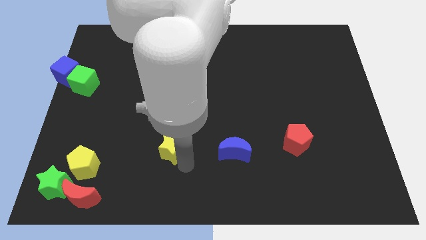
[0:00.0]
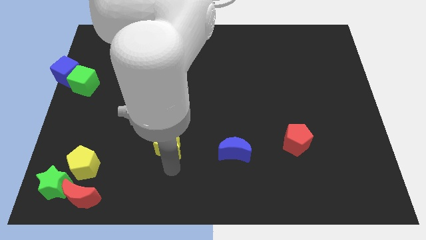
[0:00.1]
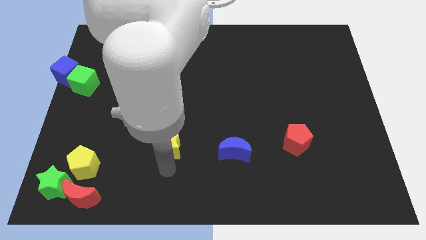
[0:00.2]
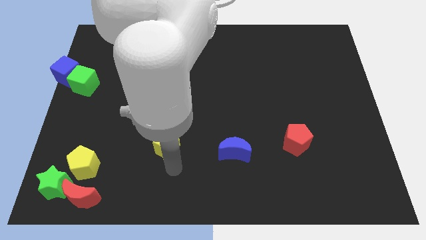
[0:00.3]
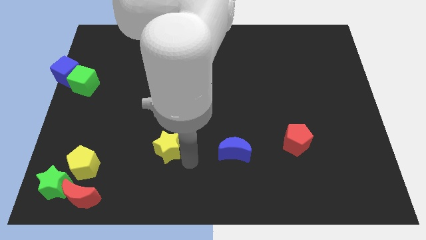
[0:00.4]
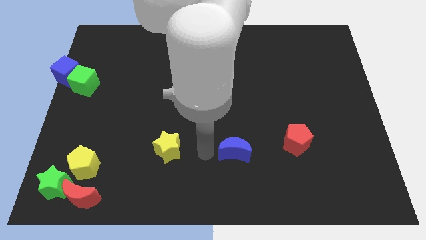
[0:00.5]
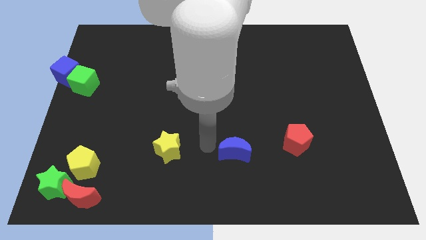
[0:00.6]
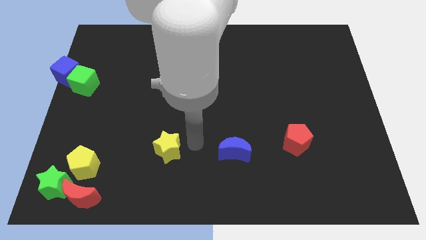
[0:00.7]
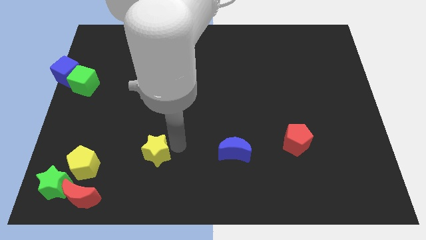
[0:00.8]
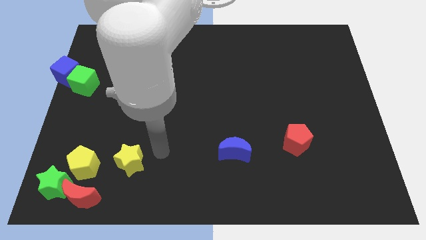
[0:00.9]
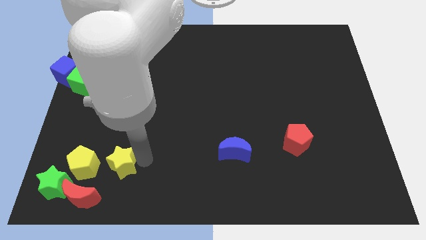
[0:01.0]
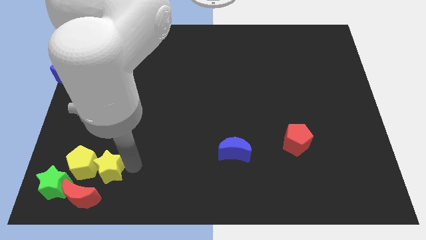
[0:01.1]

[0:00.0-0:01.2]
move the yellow star right to the yellow pentagon

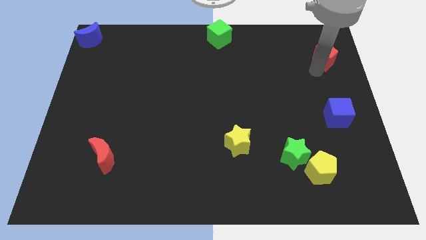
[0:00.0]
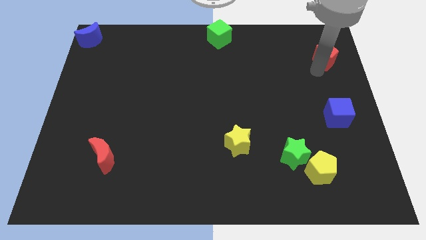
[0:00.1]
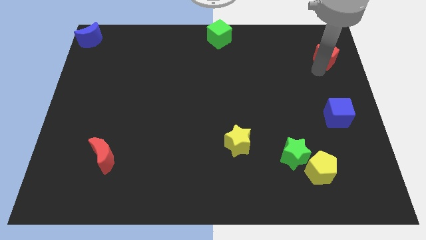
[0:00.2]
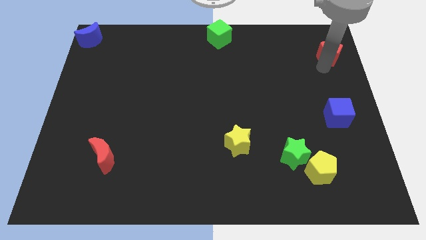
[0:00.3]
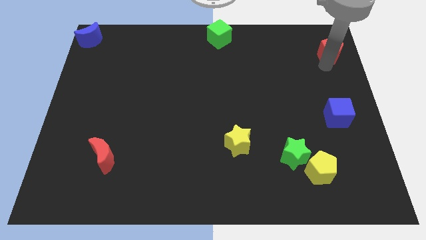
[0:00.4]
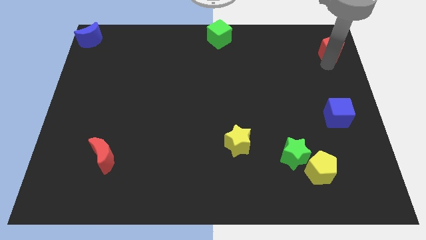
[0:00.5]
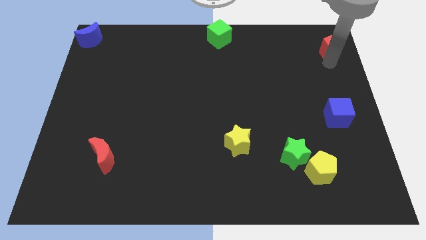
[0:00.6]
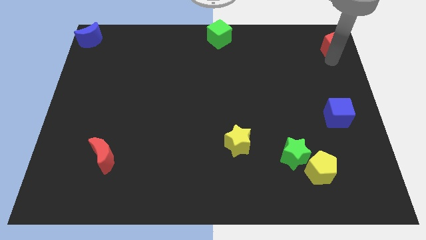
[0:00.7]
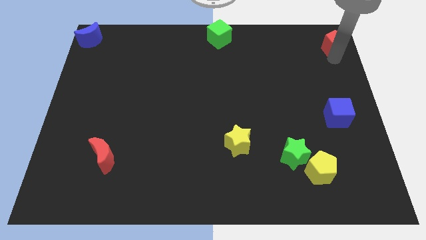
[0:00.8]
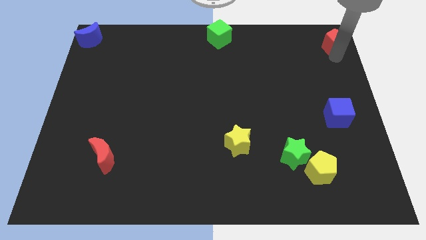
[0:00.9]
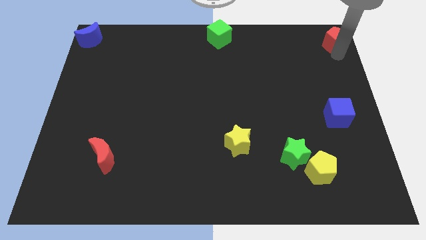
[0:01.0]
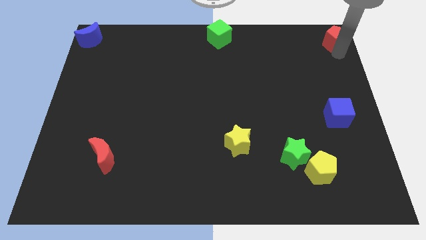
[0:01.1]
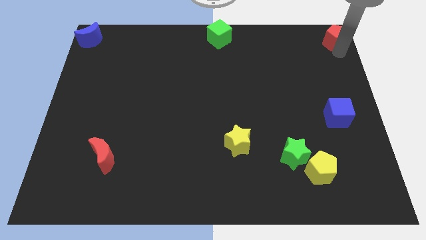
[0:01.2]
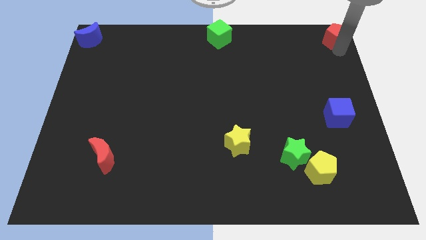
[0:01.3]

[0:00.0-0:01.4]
put the red pentagon at the top right corner of the board

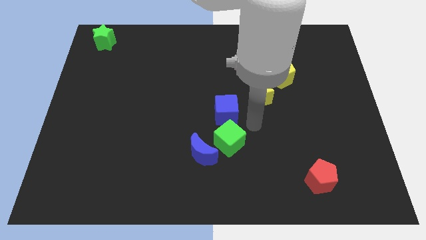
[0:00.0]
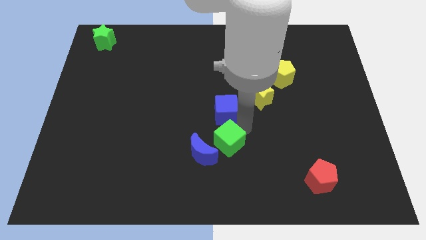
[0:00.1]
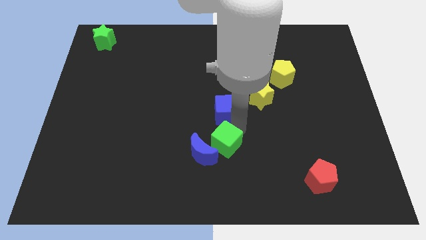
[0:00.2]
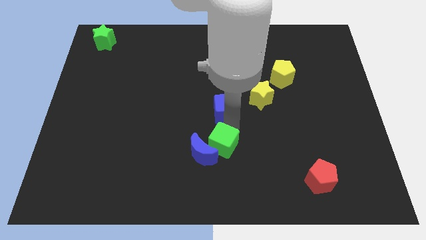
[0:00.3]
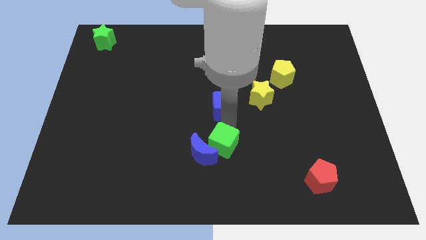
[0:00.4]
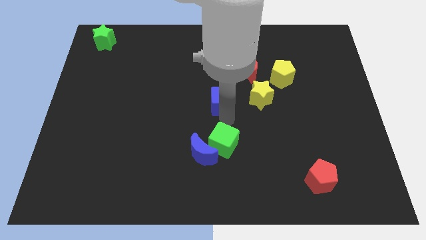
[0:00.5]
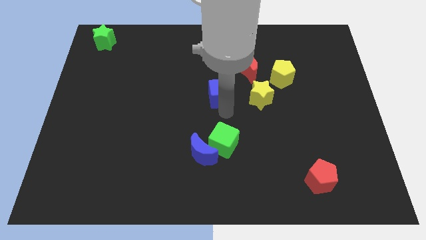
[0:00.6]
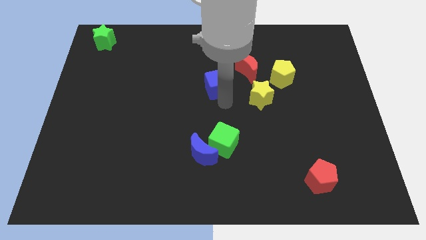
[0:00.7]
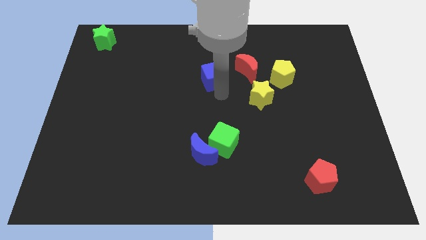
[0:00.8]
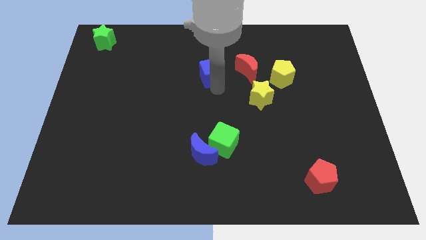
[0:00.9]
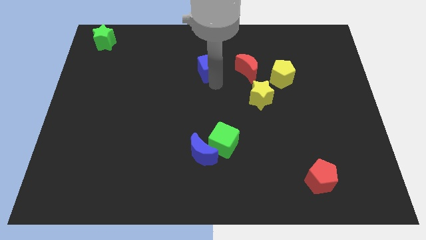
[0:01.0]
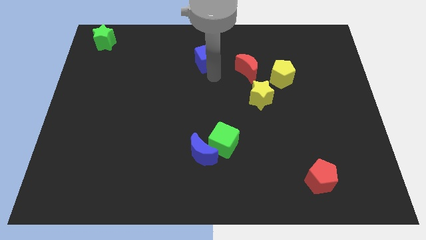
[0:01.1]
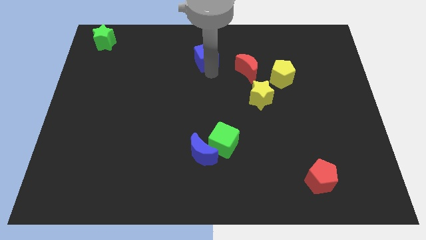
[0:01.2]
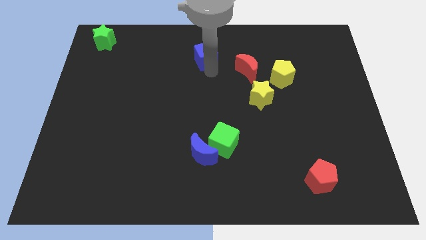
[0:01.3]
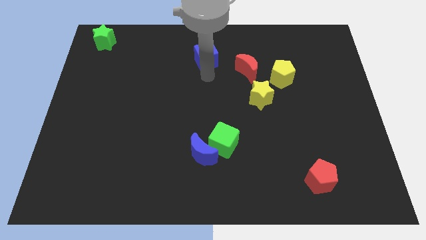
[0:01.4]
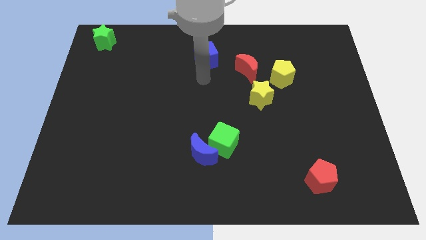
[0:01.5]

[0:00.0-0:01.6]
slide the blue cube towards the top center

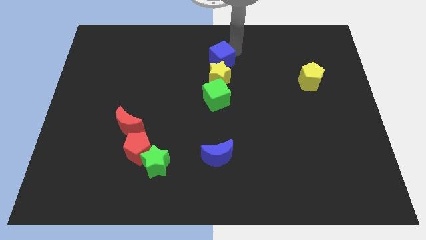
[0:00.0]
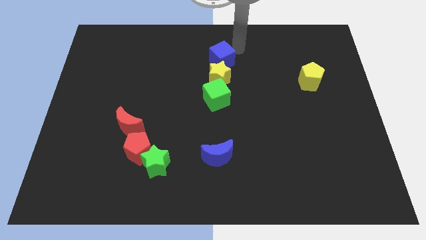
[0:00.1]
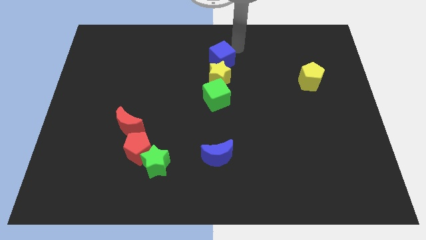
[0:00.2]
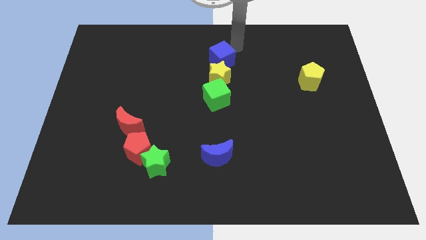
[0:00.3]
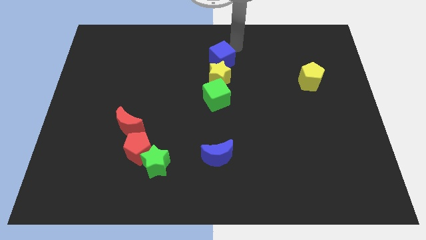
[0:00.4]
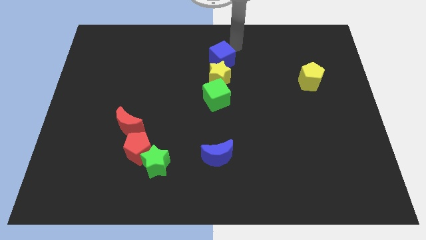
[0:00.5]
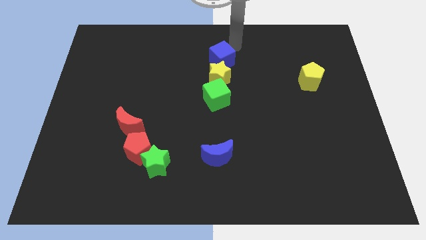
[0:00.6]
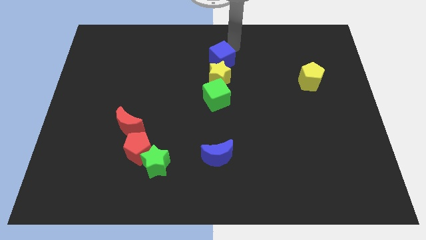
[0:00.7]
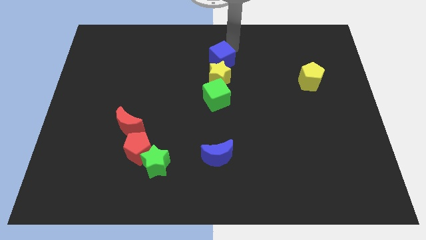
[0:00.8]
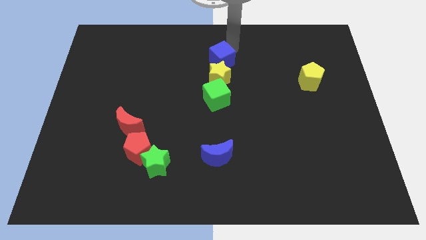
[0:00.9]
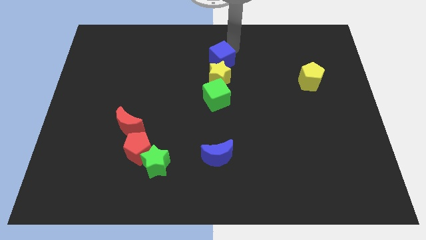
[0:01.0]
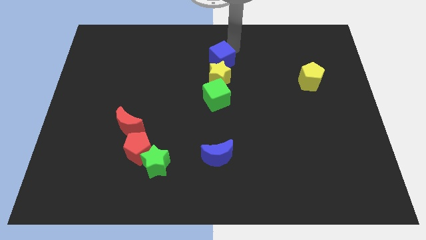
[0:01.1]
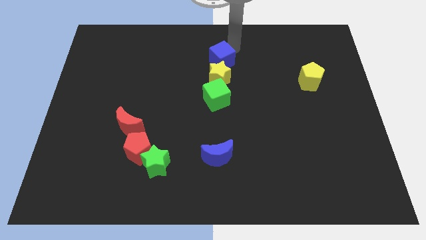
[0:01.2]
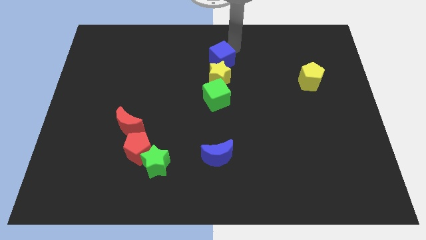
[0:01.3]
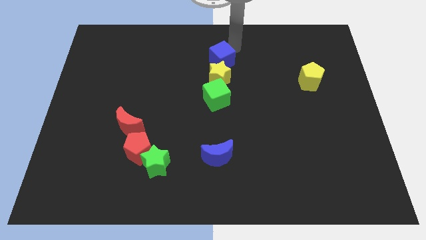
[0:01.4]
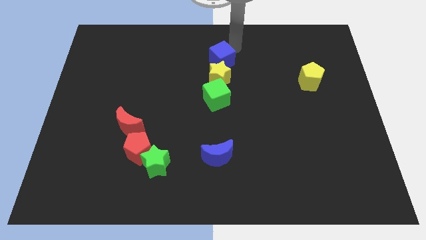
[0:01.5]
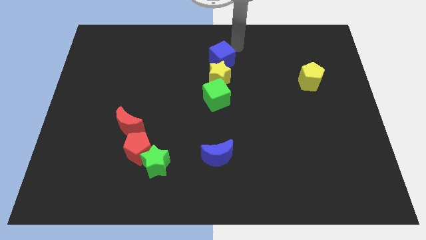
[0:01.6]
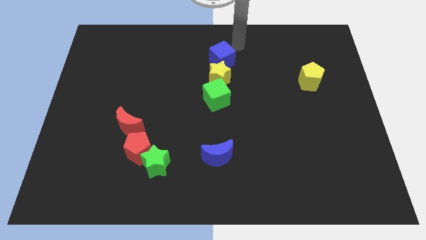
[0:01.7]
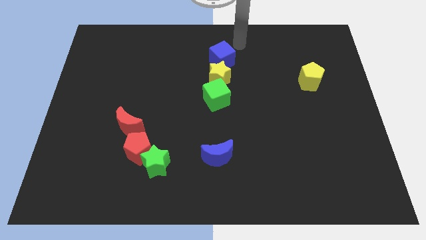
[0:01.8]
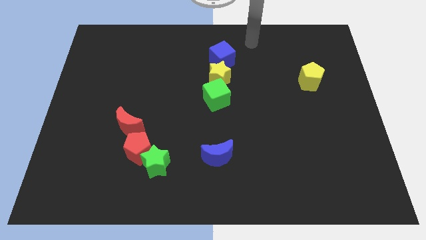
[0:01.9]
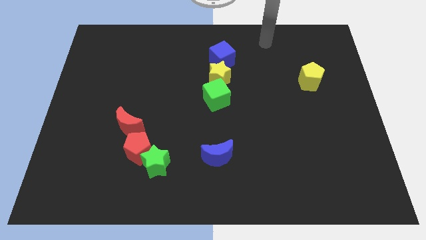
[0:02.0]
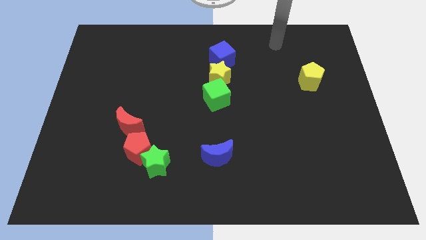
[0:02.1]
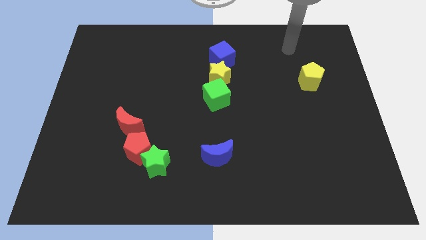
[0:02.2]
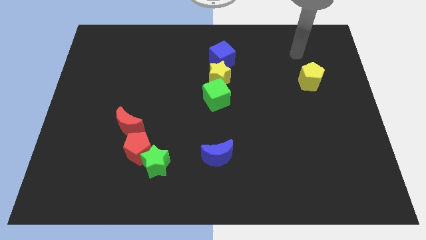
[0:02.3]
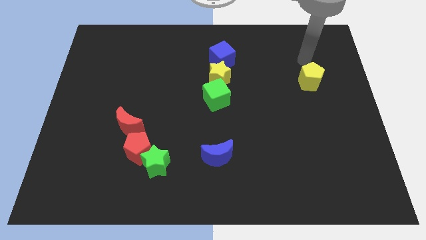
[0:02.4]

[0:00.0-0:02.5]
move your arm and point on top of yellow pentagon

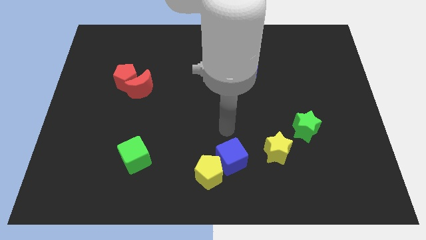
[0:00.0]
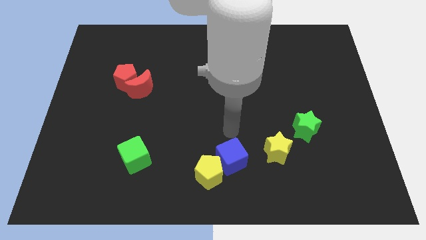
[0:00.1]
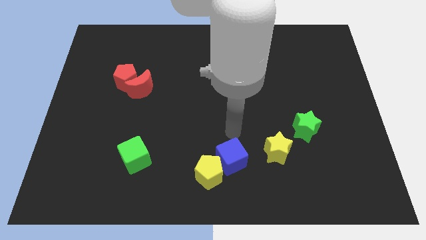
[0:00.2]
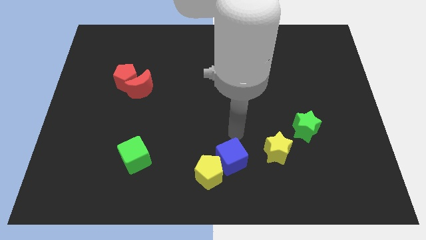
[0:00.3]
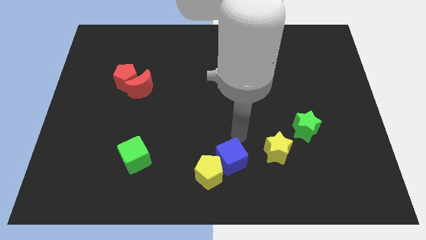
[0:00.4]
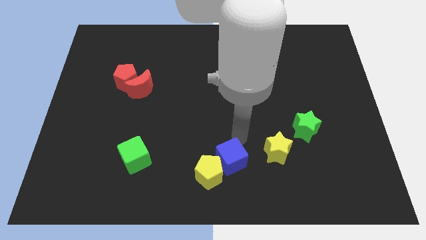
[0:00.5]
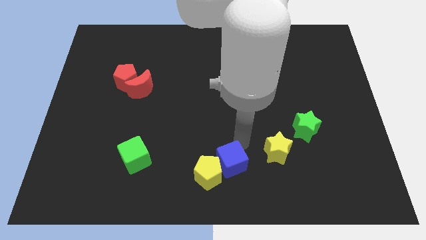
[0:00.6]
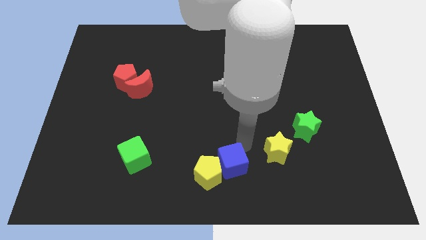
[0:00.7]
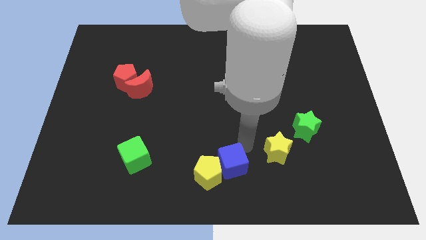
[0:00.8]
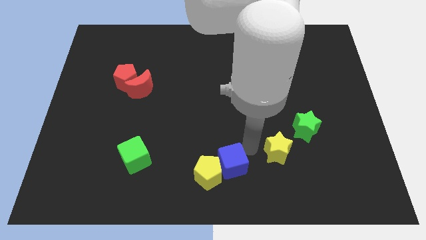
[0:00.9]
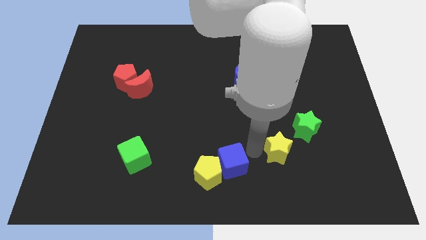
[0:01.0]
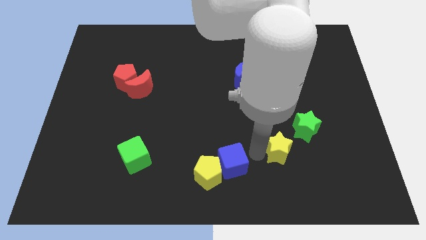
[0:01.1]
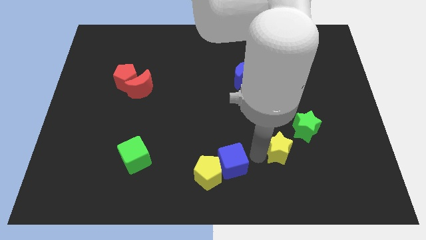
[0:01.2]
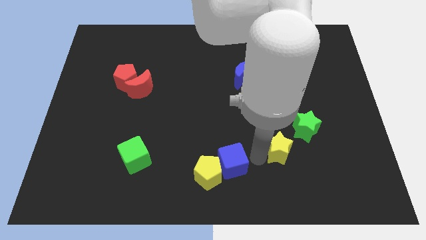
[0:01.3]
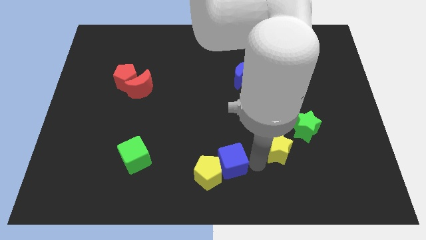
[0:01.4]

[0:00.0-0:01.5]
place the arm in between the blue cube and the yellow star

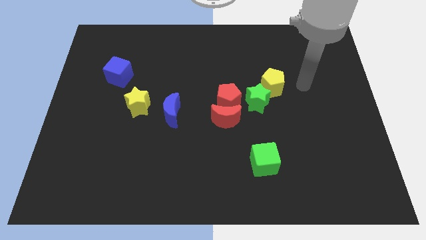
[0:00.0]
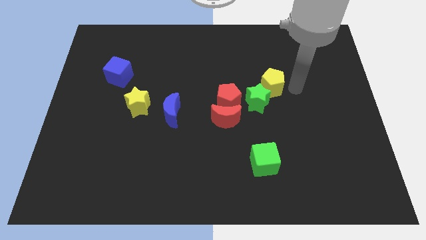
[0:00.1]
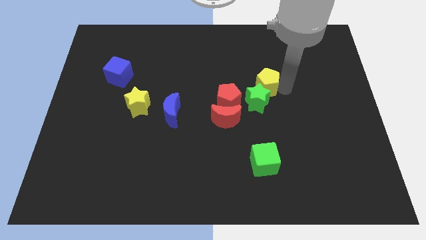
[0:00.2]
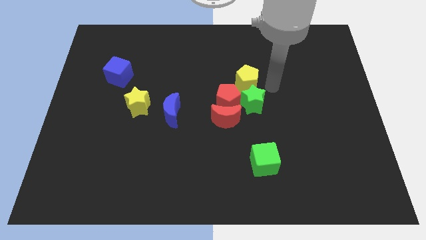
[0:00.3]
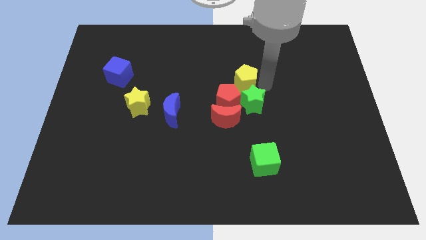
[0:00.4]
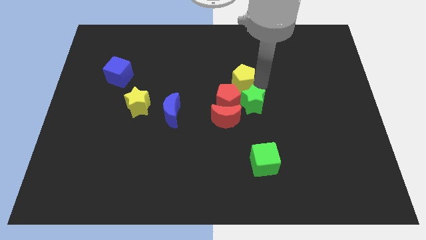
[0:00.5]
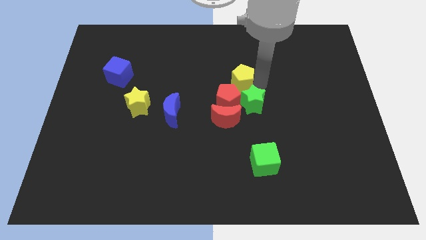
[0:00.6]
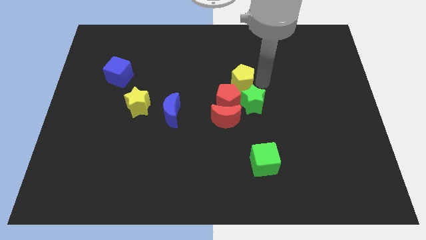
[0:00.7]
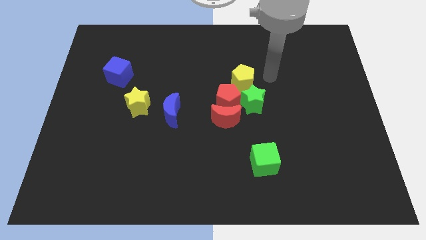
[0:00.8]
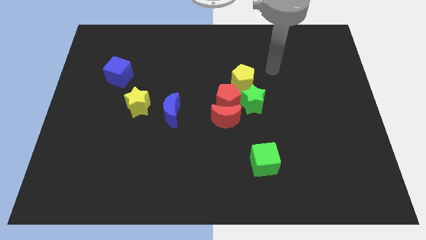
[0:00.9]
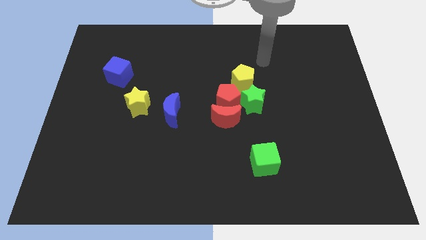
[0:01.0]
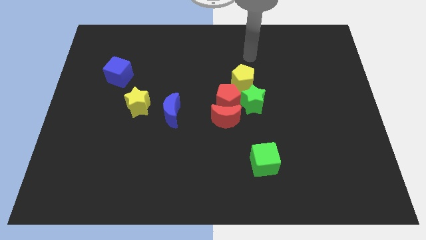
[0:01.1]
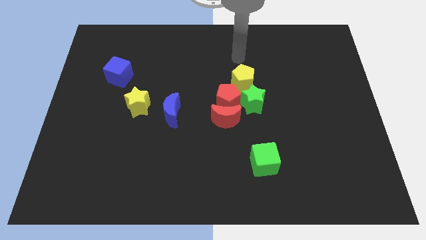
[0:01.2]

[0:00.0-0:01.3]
move the yellow pentagon close to the red pentagon
